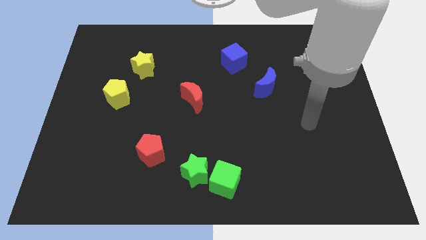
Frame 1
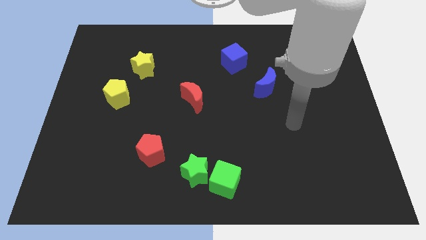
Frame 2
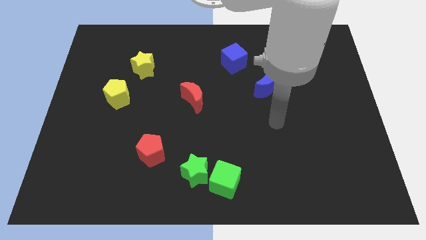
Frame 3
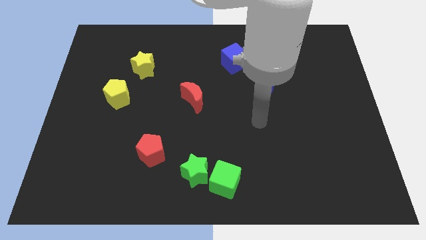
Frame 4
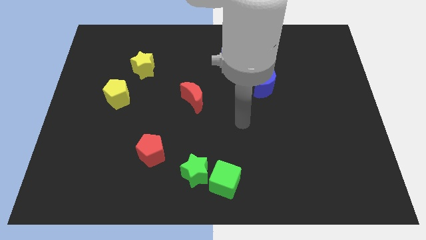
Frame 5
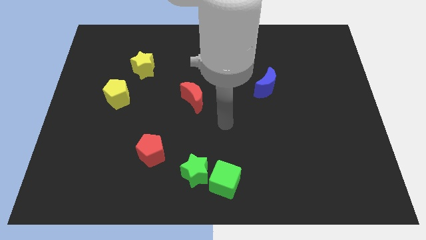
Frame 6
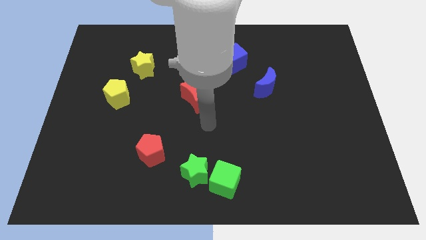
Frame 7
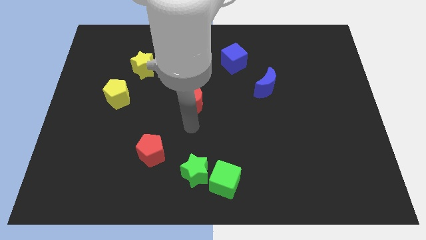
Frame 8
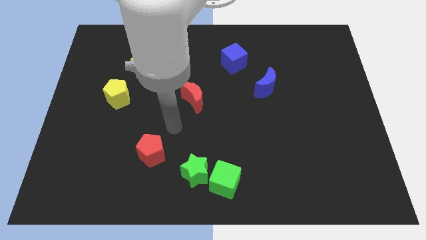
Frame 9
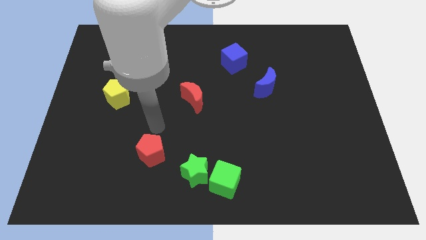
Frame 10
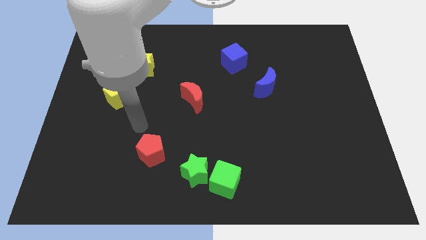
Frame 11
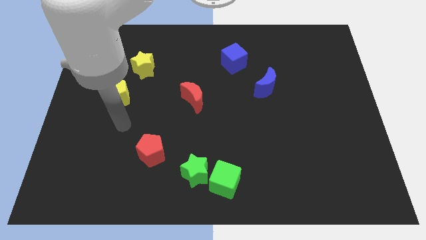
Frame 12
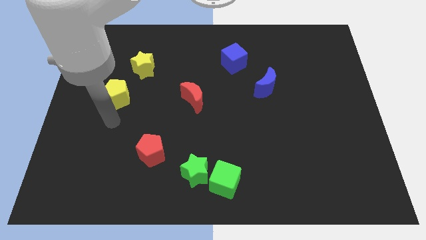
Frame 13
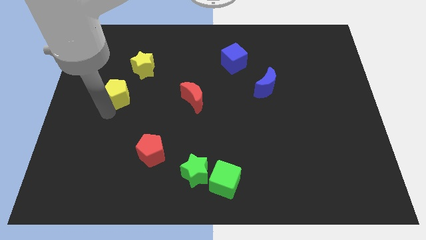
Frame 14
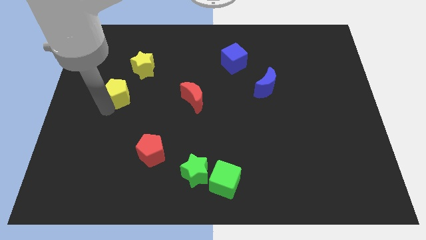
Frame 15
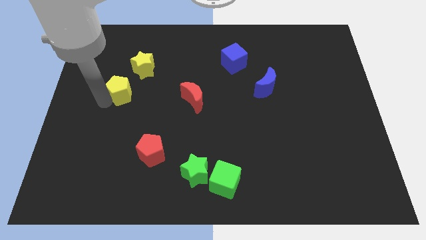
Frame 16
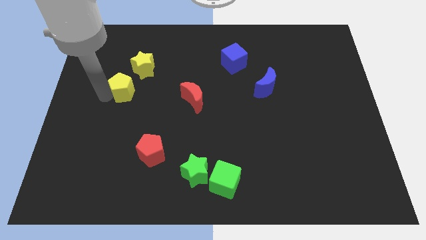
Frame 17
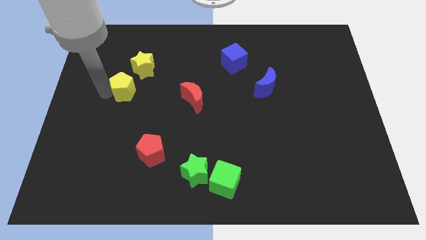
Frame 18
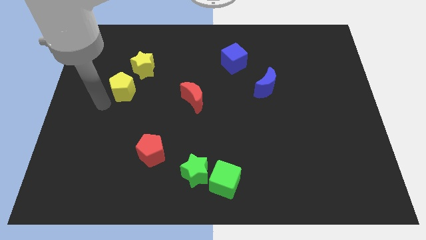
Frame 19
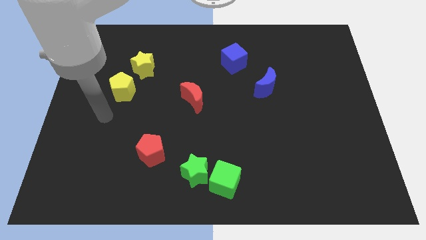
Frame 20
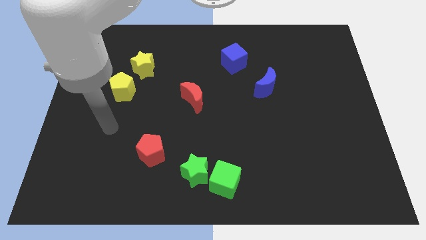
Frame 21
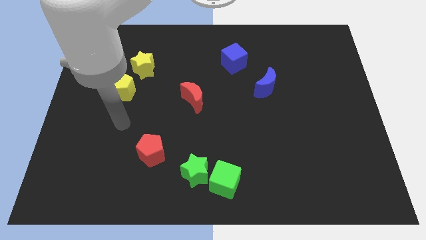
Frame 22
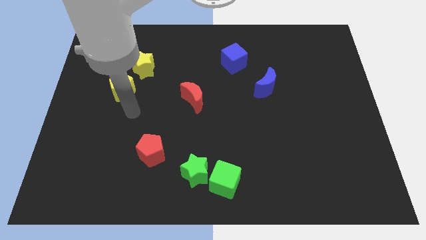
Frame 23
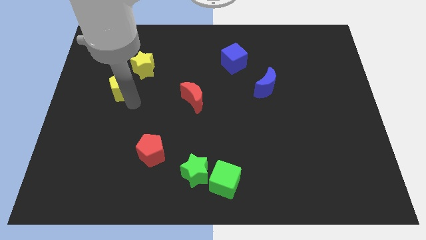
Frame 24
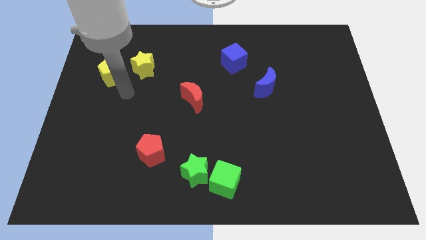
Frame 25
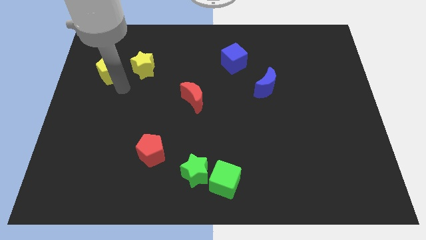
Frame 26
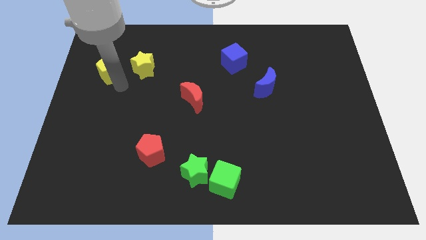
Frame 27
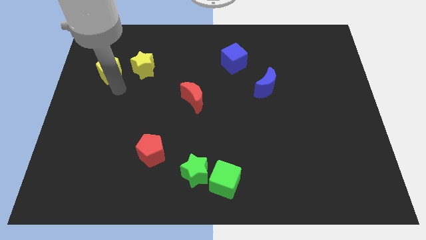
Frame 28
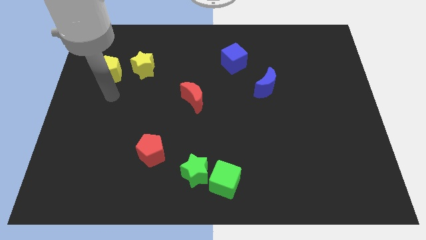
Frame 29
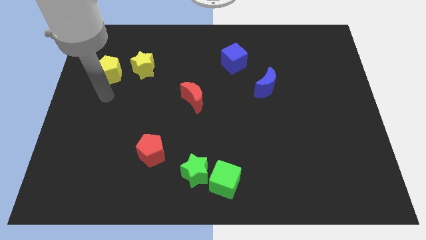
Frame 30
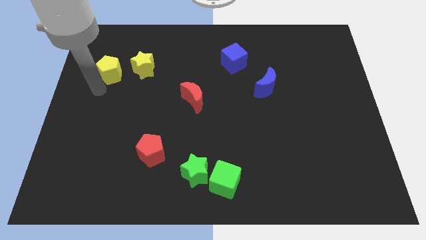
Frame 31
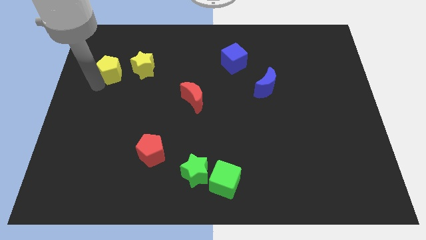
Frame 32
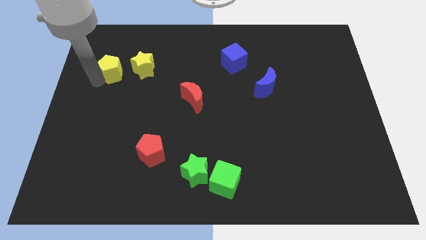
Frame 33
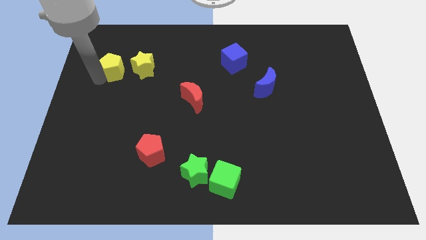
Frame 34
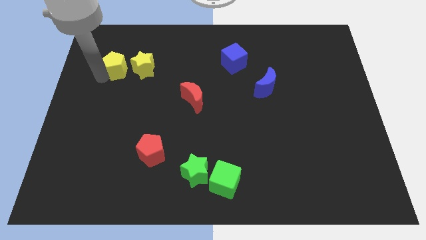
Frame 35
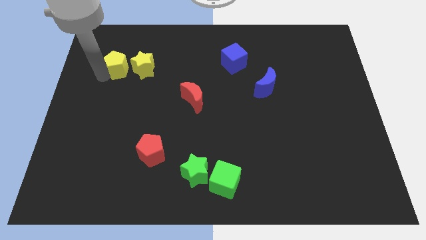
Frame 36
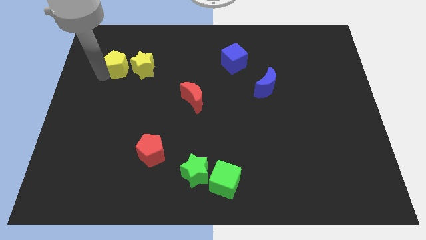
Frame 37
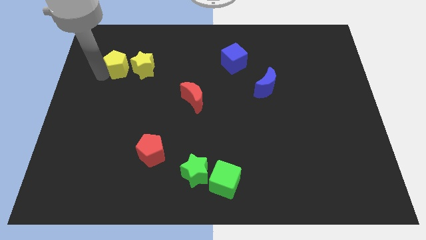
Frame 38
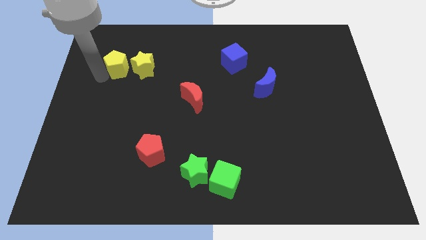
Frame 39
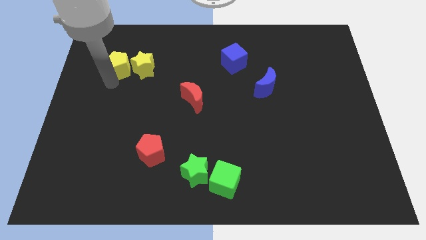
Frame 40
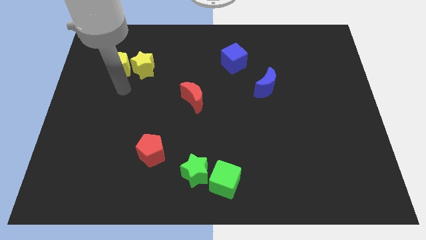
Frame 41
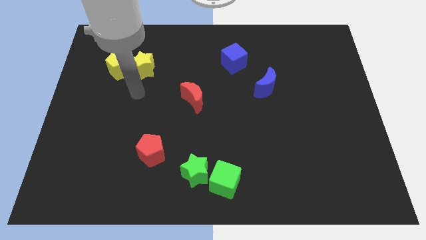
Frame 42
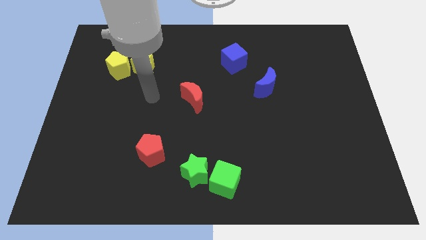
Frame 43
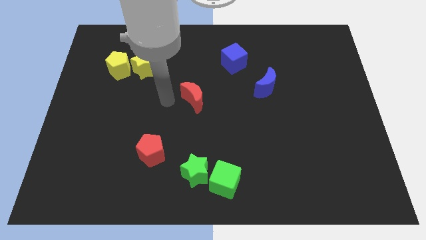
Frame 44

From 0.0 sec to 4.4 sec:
push the yellow pentagon left to the yellow star

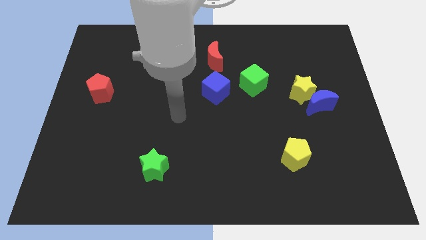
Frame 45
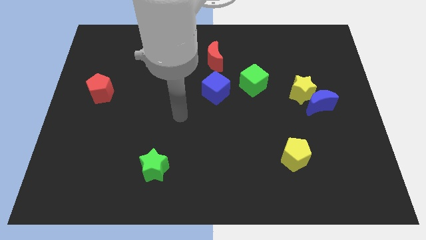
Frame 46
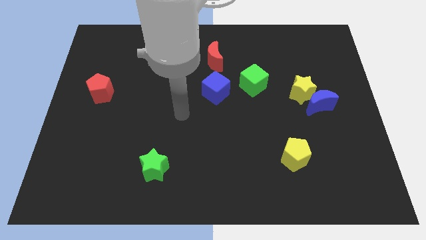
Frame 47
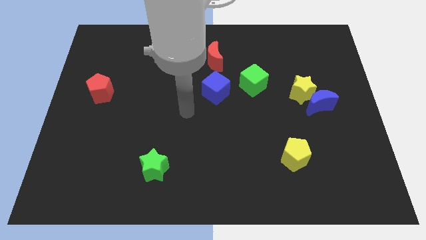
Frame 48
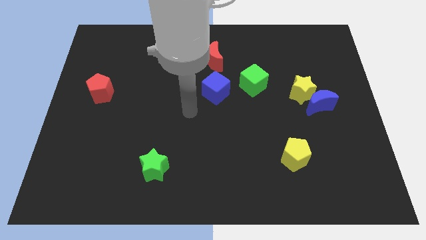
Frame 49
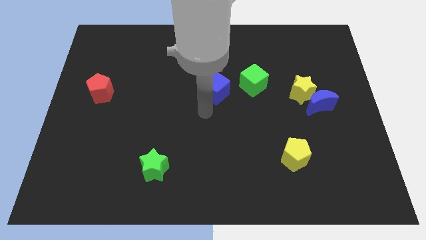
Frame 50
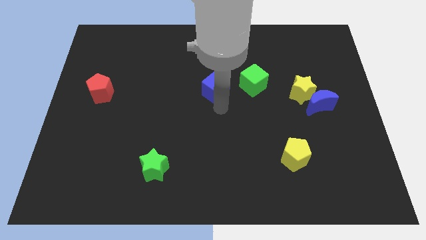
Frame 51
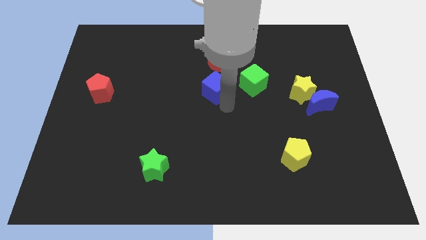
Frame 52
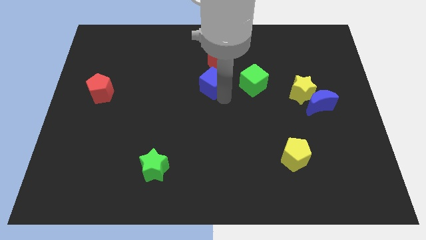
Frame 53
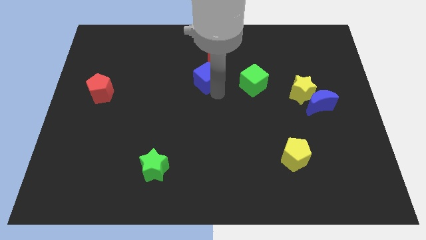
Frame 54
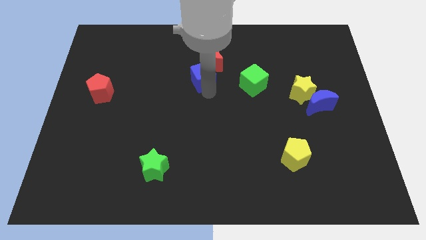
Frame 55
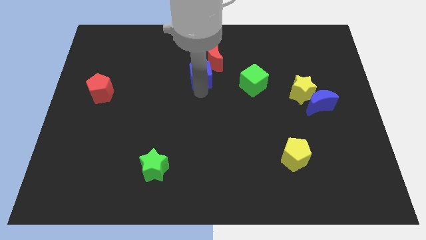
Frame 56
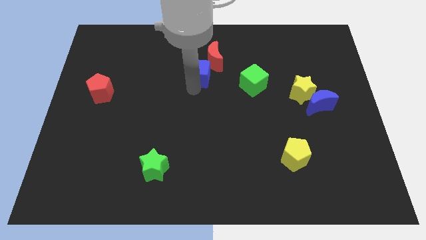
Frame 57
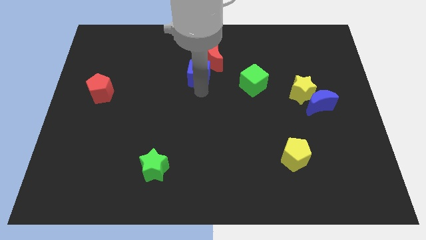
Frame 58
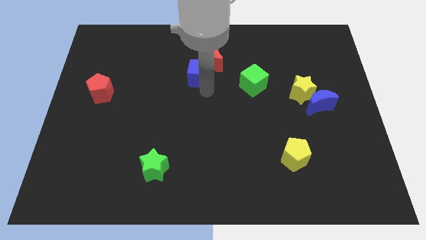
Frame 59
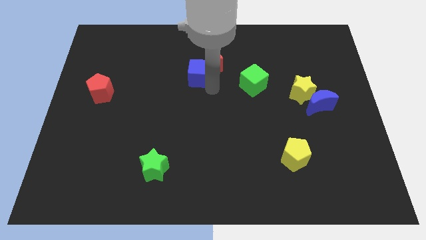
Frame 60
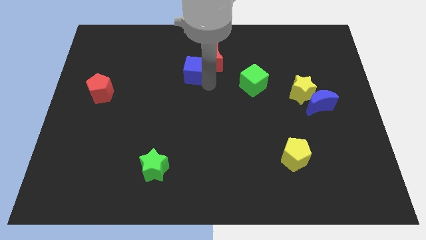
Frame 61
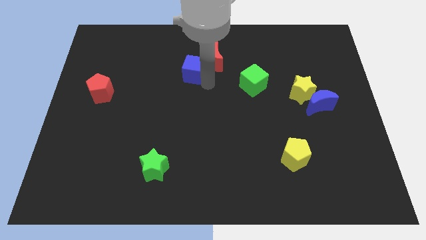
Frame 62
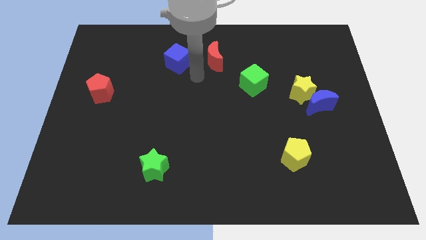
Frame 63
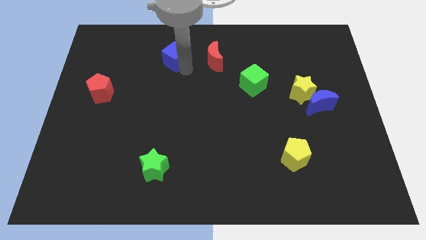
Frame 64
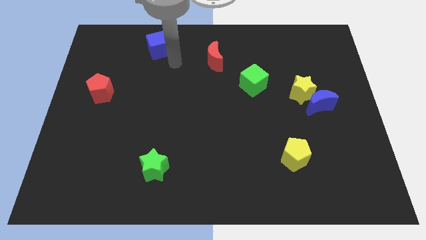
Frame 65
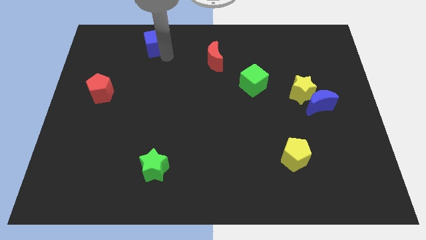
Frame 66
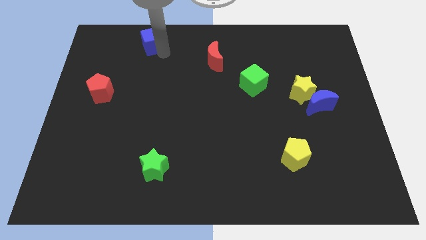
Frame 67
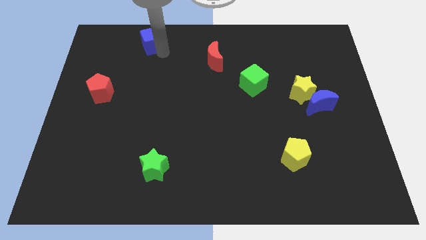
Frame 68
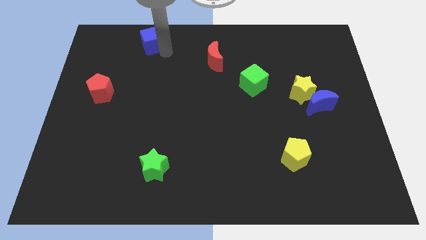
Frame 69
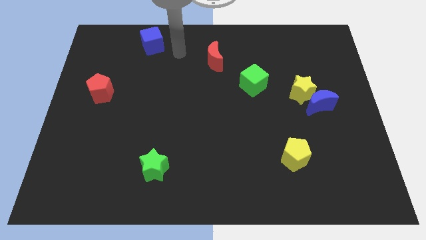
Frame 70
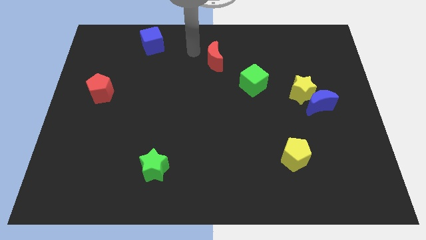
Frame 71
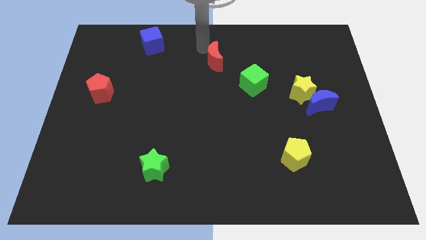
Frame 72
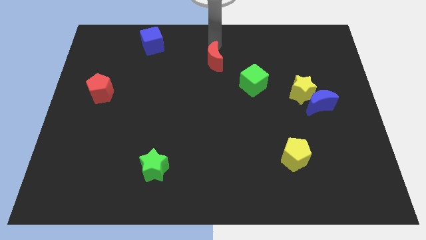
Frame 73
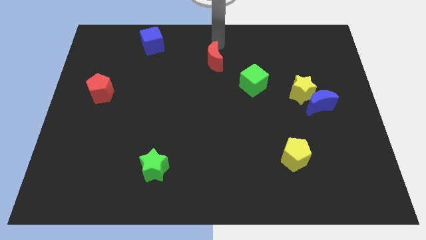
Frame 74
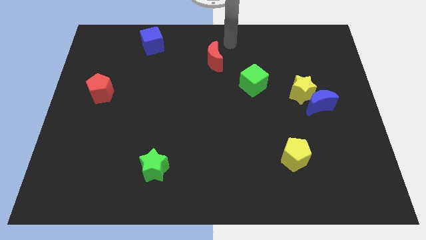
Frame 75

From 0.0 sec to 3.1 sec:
move the blue cube towards the top left

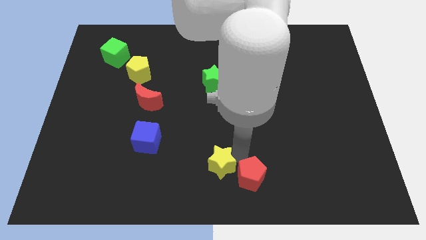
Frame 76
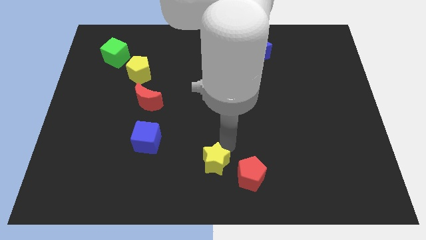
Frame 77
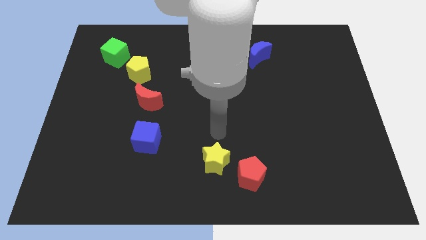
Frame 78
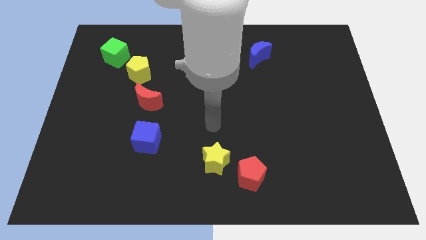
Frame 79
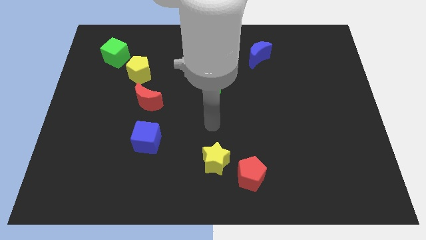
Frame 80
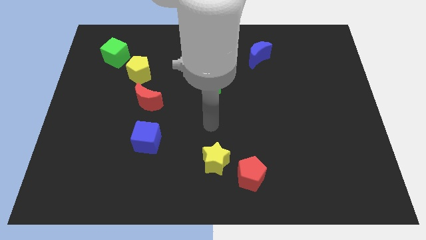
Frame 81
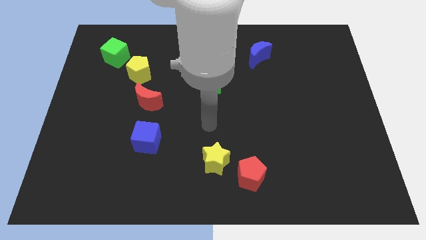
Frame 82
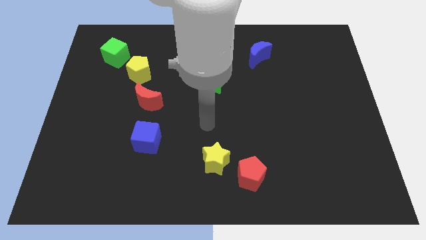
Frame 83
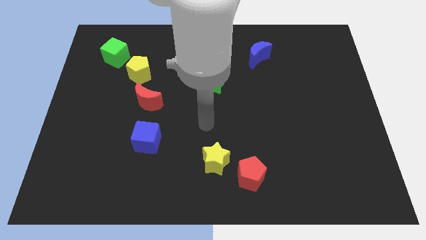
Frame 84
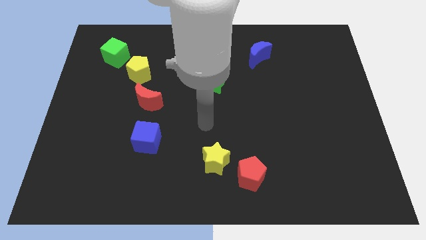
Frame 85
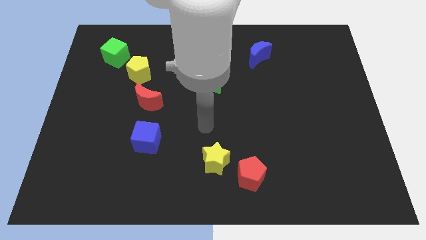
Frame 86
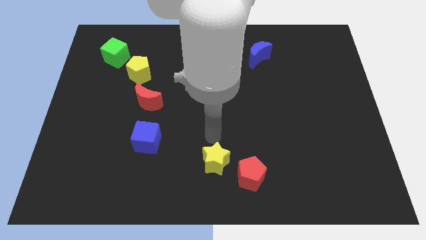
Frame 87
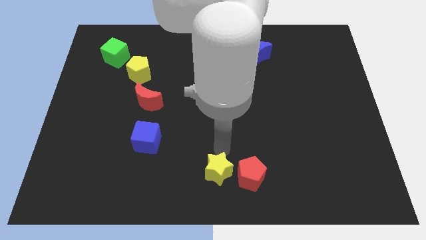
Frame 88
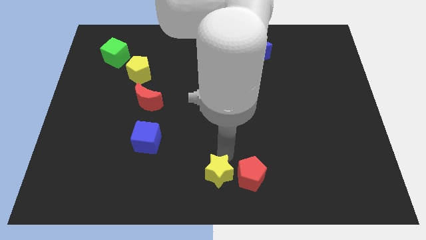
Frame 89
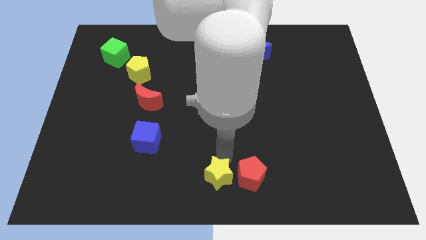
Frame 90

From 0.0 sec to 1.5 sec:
place the yellow star to the left of the red pentagon
